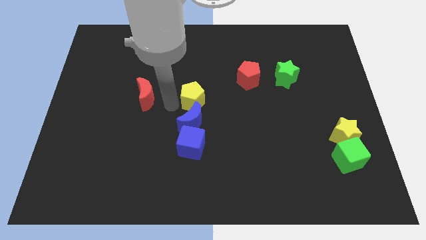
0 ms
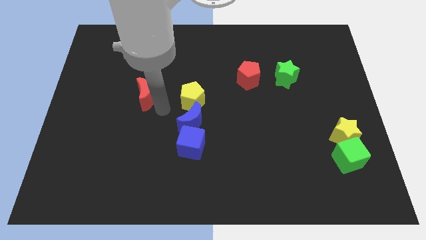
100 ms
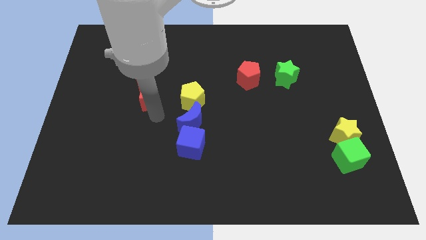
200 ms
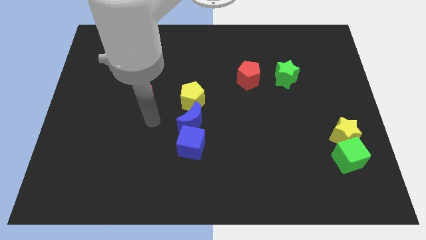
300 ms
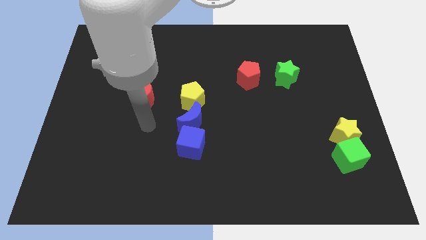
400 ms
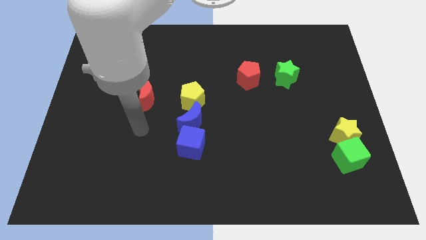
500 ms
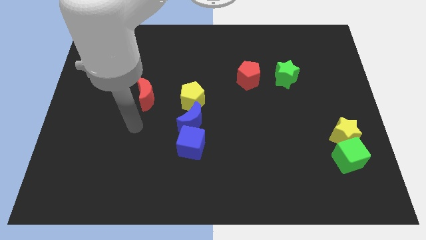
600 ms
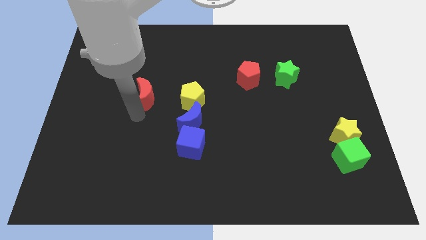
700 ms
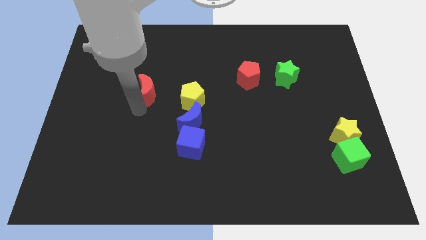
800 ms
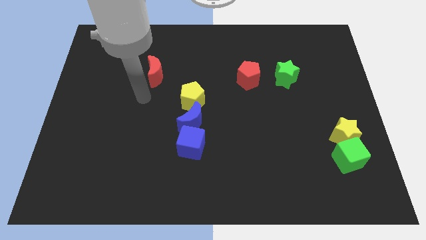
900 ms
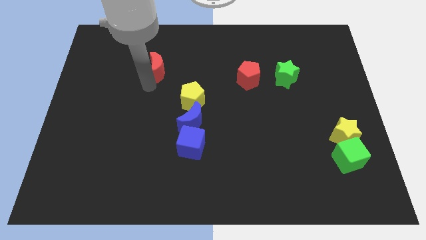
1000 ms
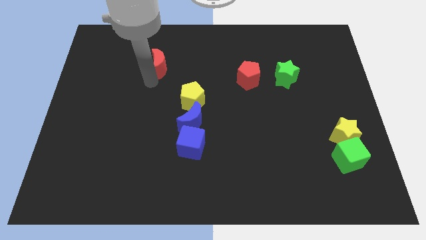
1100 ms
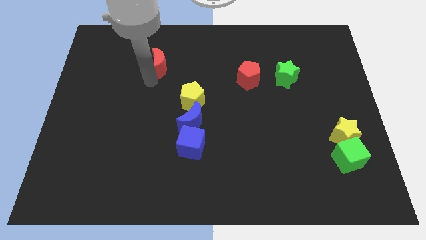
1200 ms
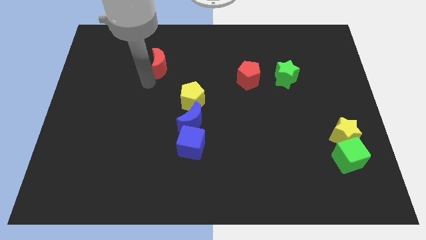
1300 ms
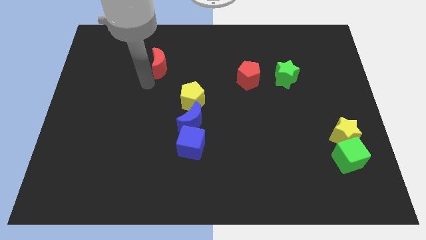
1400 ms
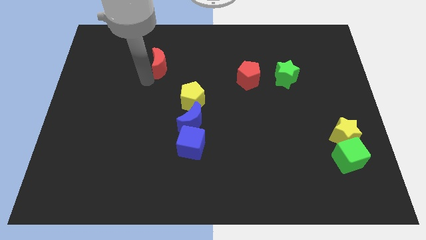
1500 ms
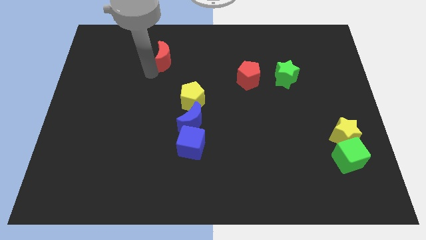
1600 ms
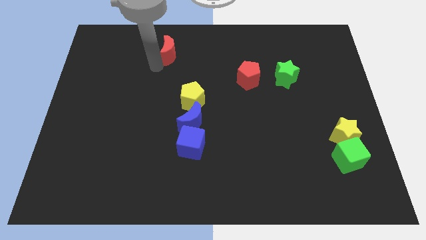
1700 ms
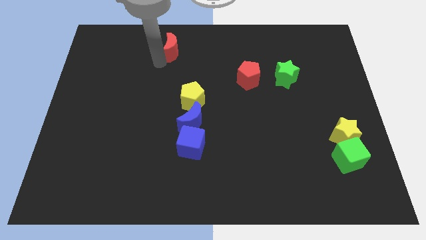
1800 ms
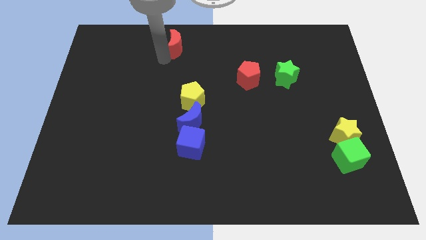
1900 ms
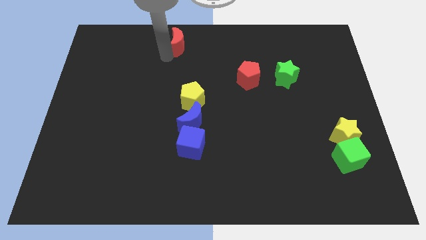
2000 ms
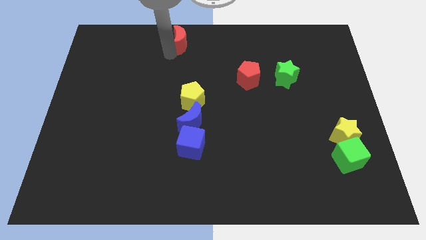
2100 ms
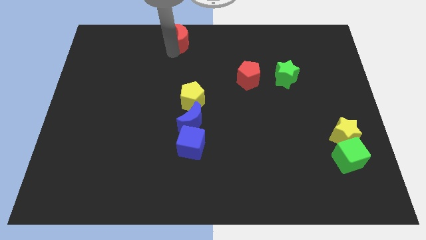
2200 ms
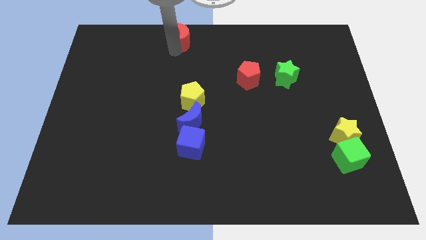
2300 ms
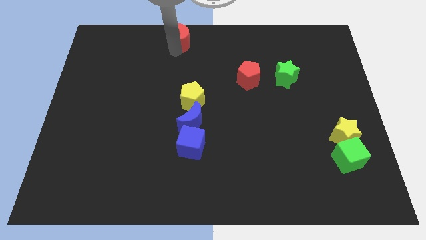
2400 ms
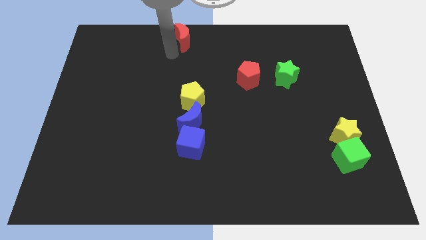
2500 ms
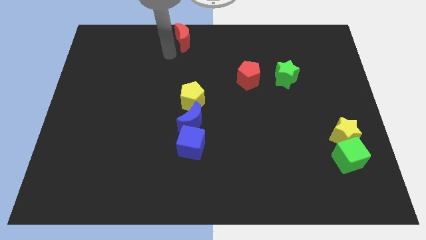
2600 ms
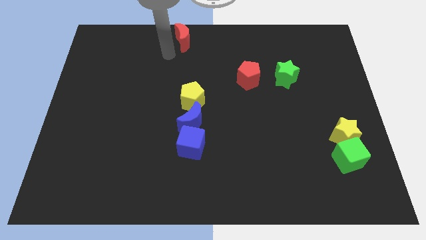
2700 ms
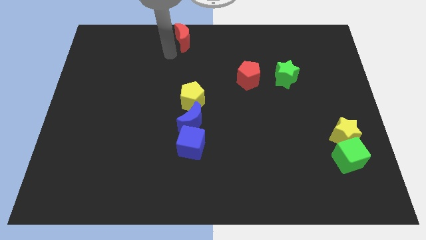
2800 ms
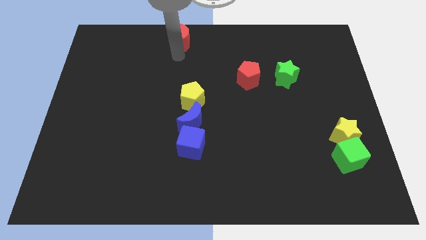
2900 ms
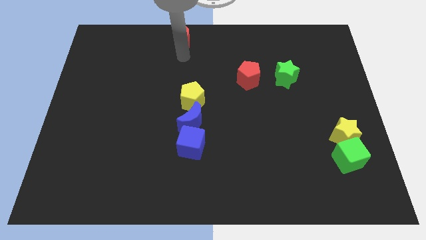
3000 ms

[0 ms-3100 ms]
move red moon above yellow pentagon

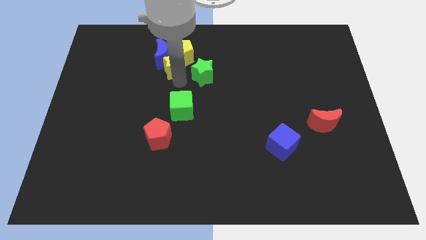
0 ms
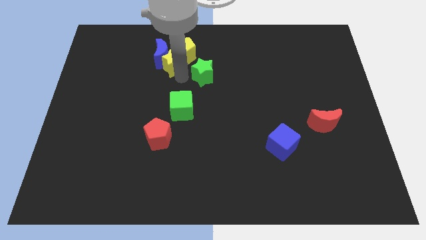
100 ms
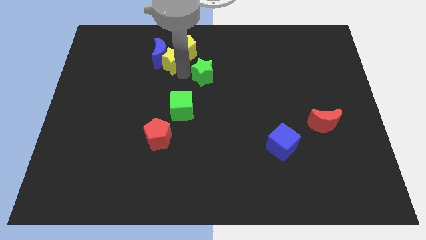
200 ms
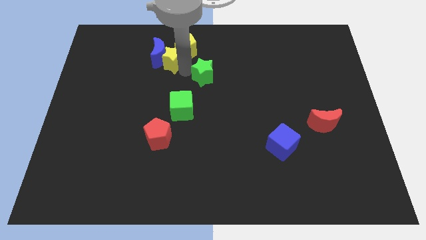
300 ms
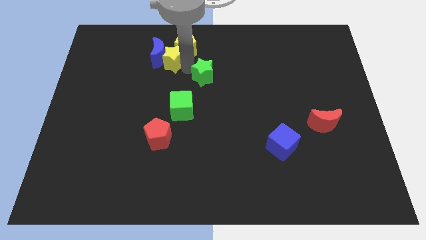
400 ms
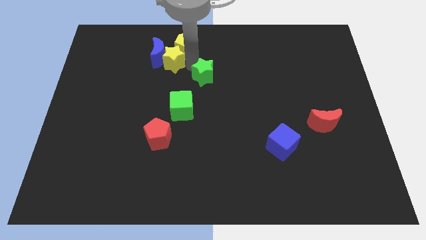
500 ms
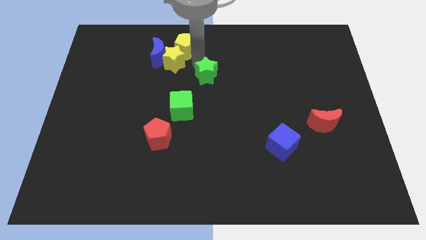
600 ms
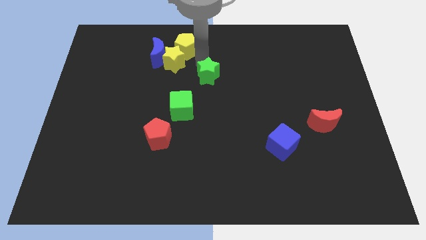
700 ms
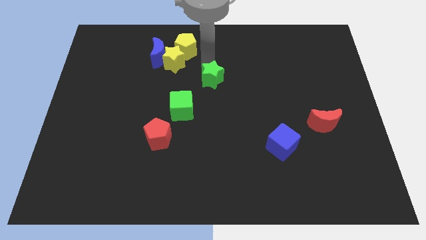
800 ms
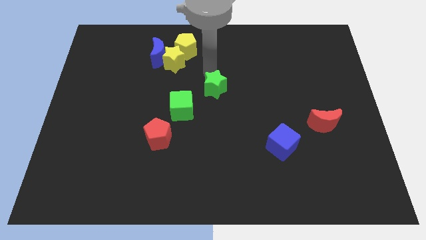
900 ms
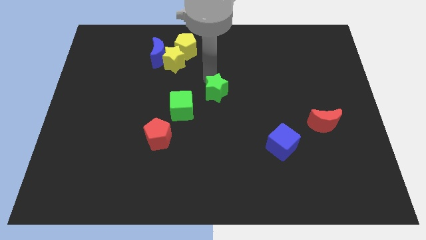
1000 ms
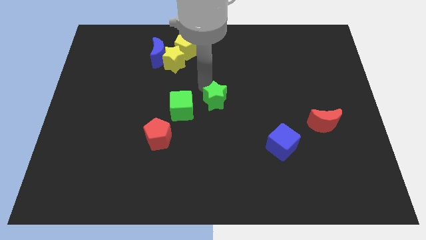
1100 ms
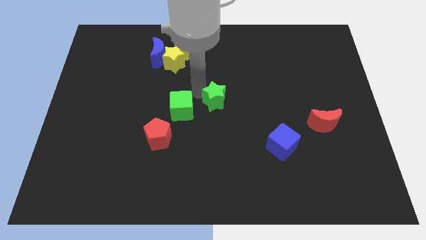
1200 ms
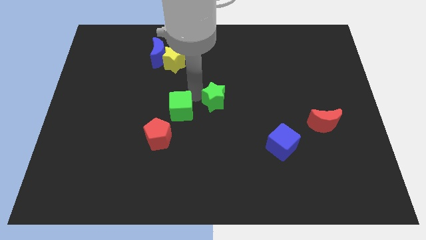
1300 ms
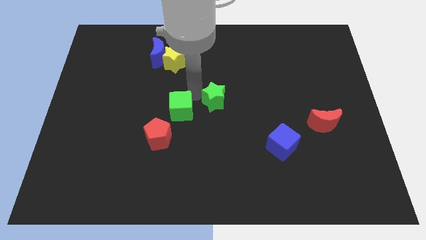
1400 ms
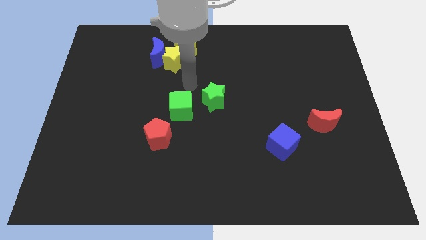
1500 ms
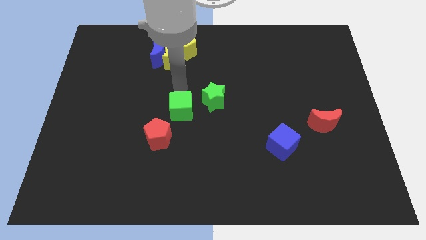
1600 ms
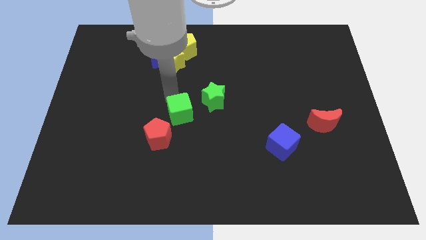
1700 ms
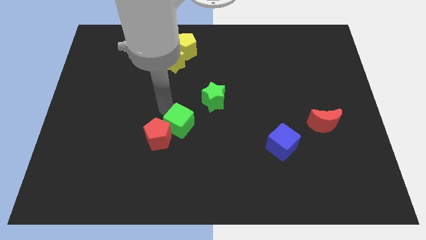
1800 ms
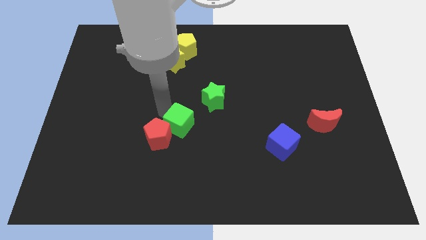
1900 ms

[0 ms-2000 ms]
move the green block towards the top right side of the red pentagon

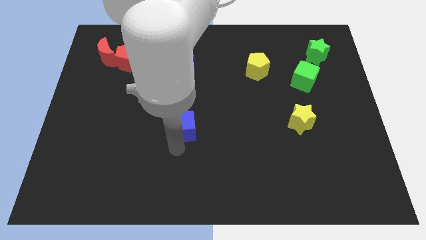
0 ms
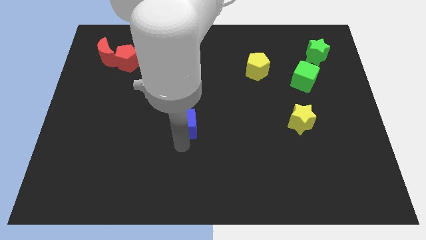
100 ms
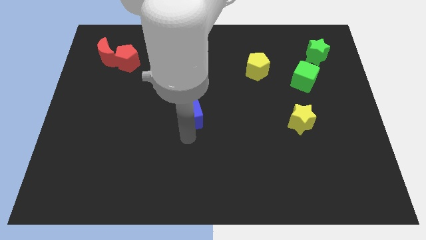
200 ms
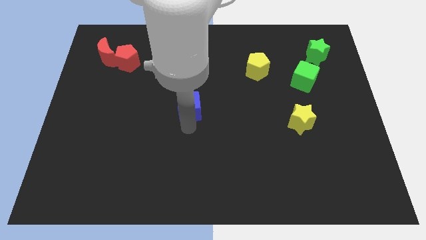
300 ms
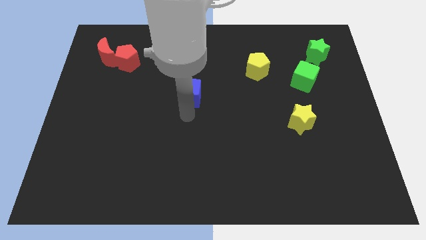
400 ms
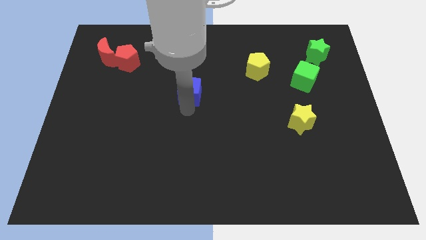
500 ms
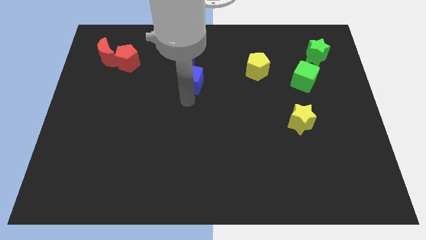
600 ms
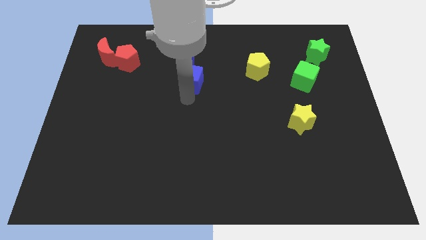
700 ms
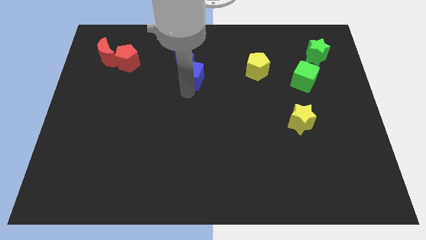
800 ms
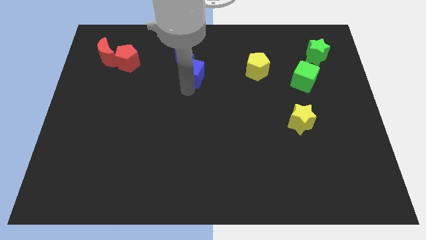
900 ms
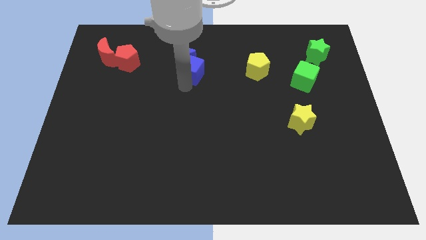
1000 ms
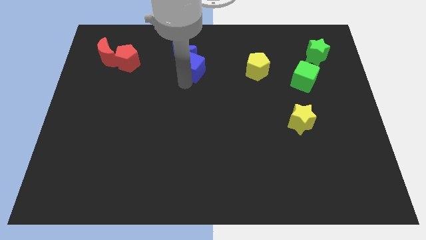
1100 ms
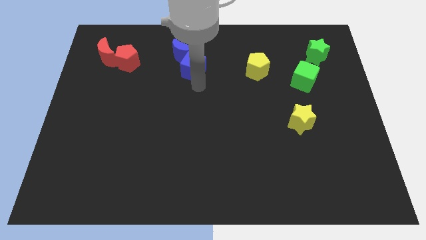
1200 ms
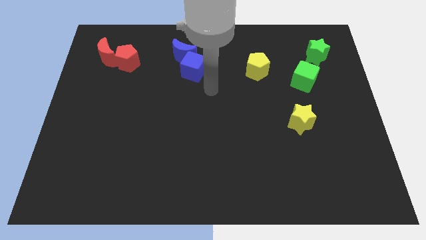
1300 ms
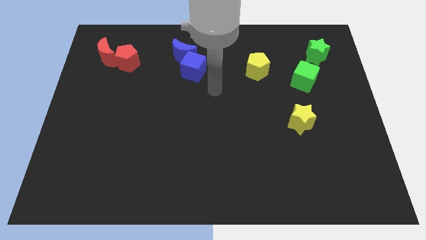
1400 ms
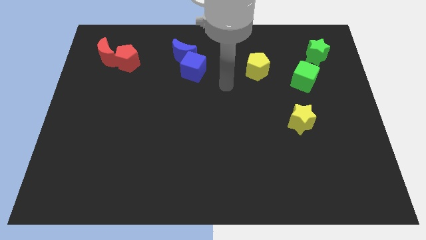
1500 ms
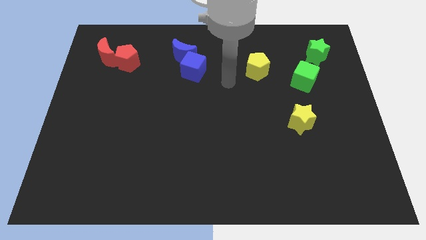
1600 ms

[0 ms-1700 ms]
place the blue cube below the blue crescent

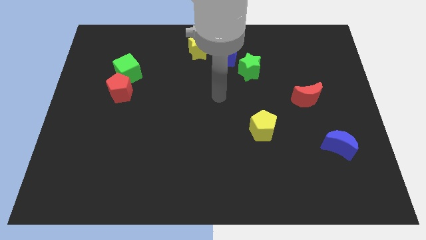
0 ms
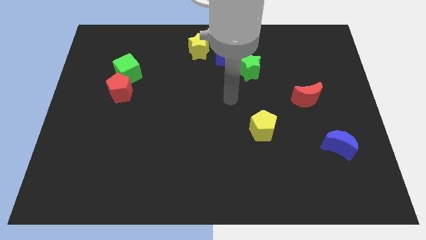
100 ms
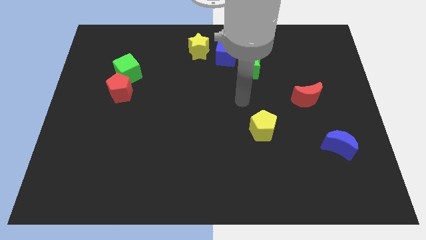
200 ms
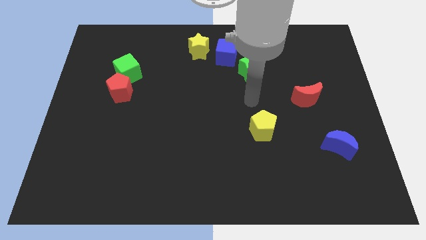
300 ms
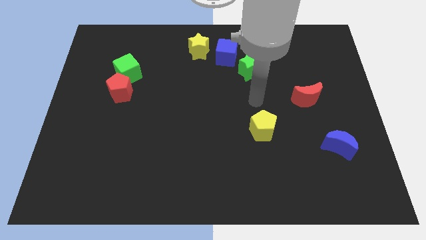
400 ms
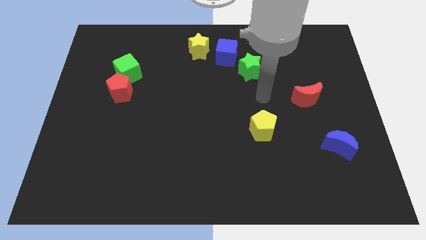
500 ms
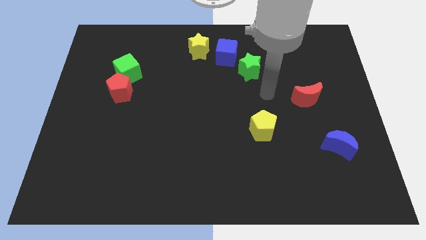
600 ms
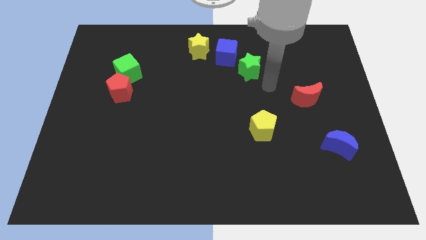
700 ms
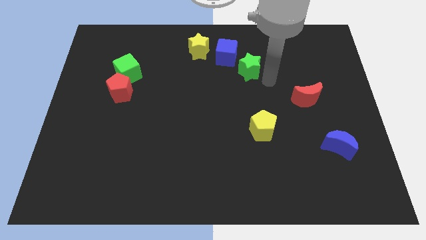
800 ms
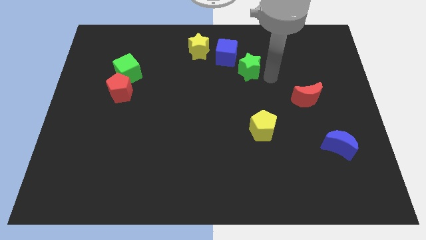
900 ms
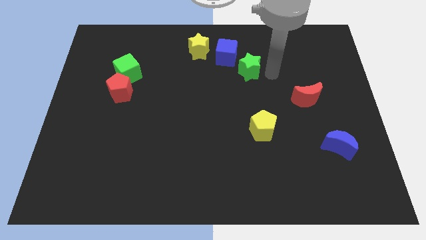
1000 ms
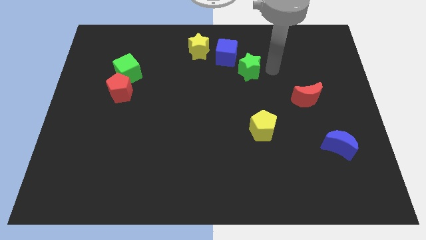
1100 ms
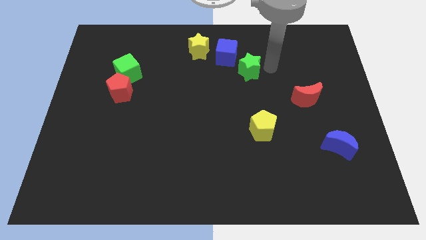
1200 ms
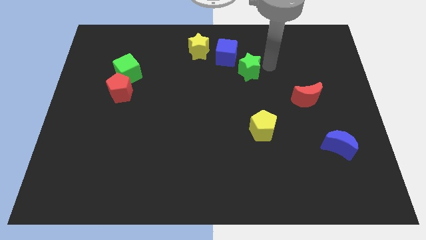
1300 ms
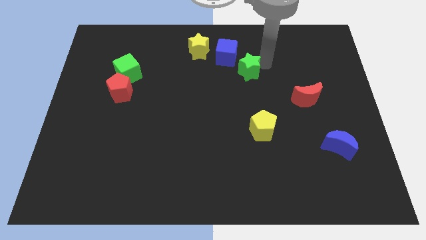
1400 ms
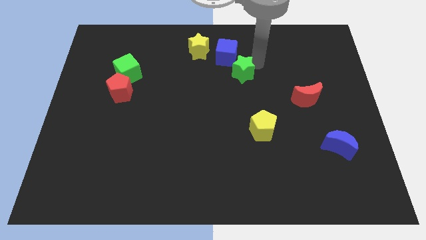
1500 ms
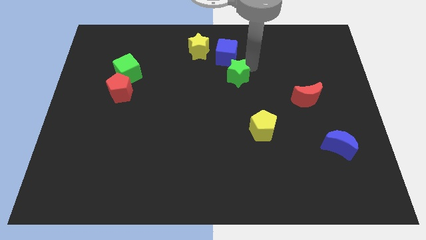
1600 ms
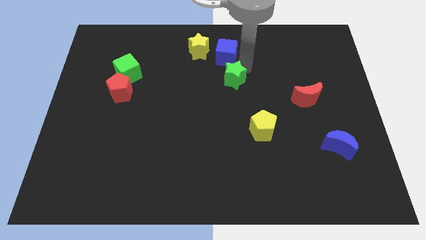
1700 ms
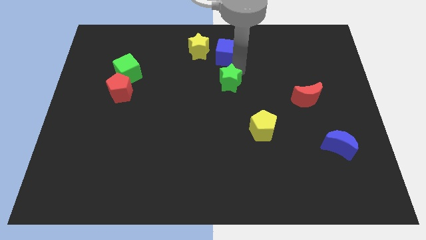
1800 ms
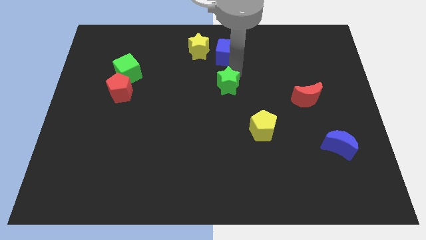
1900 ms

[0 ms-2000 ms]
put the green star below the blue cube

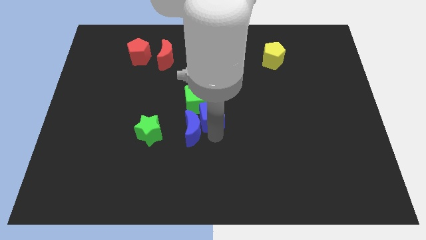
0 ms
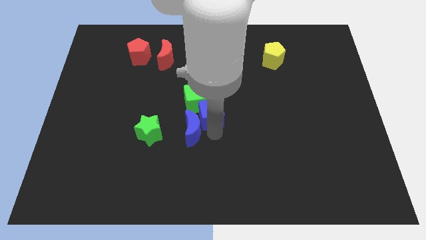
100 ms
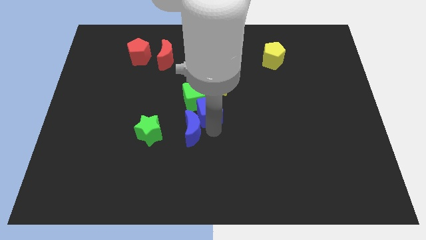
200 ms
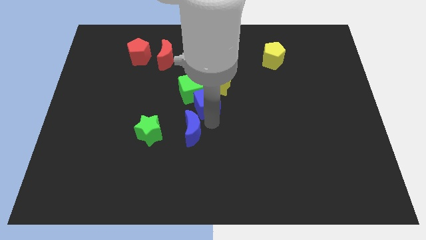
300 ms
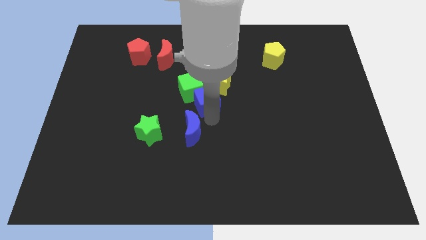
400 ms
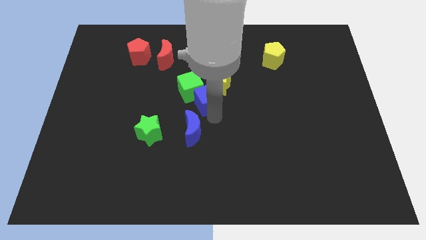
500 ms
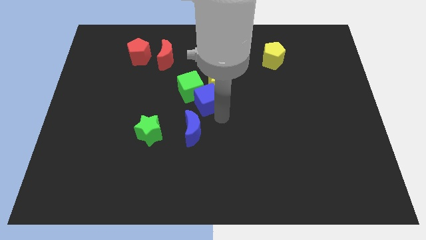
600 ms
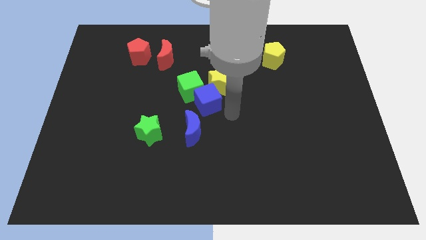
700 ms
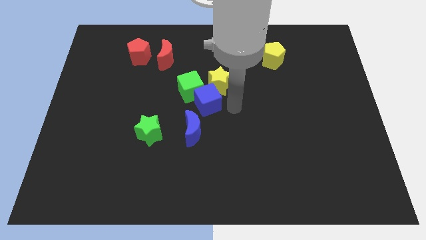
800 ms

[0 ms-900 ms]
push blue cube into green cube
